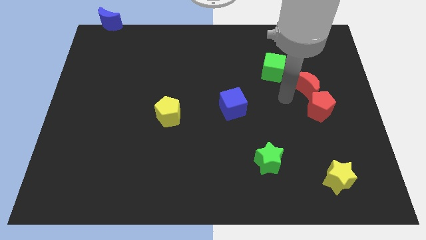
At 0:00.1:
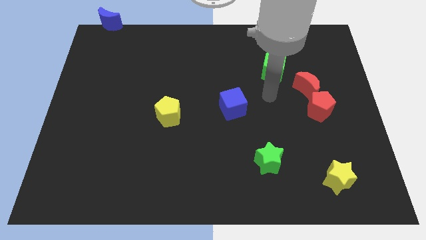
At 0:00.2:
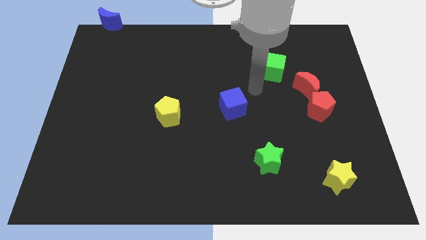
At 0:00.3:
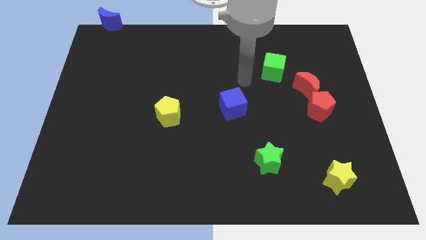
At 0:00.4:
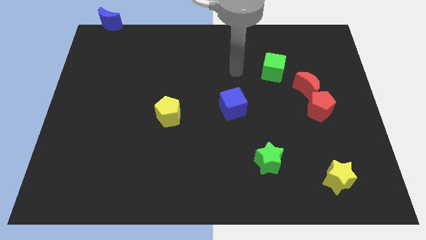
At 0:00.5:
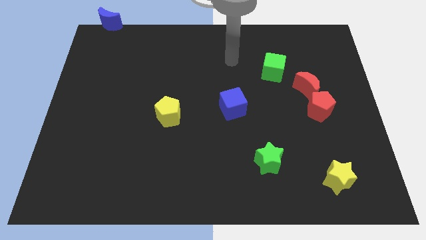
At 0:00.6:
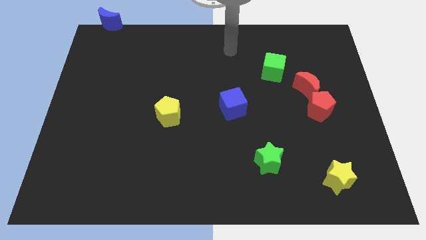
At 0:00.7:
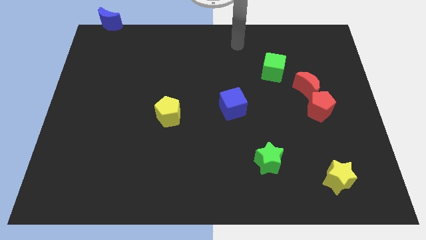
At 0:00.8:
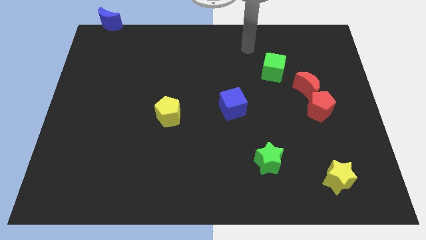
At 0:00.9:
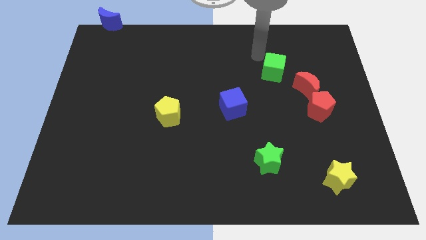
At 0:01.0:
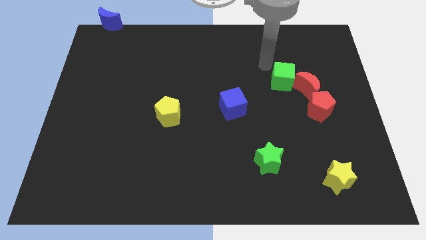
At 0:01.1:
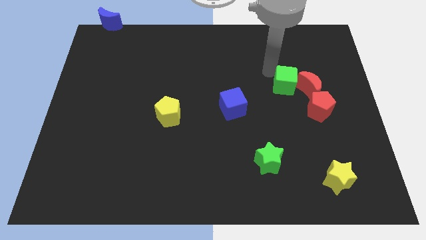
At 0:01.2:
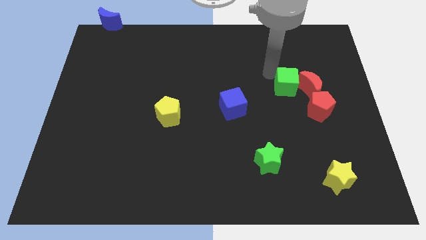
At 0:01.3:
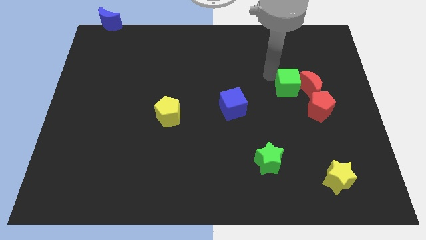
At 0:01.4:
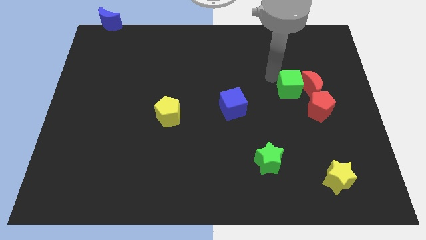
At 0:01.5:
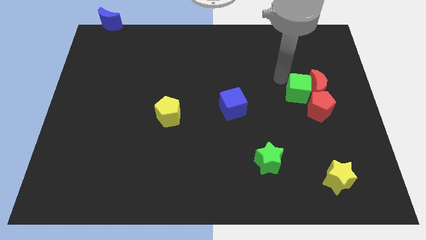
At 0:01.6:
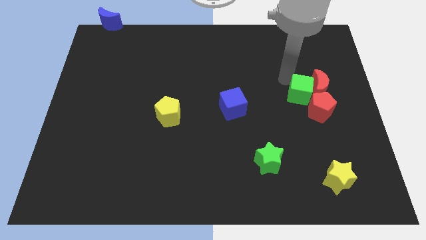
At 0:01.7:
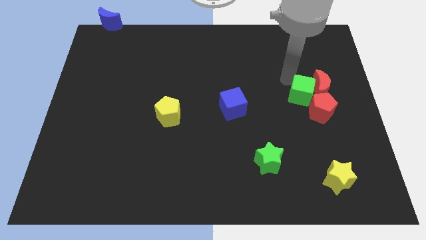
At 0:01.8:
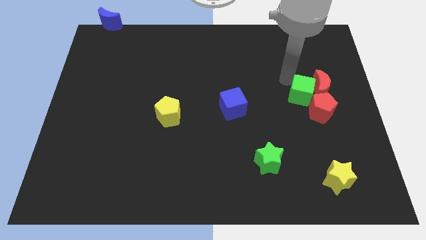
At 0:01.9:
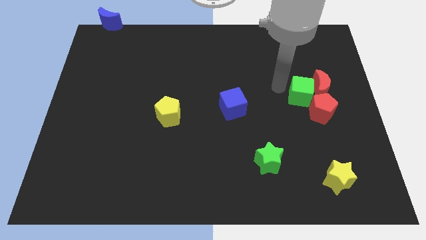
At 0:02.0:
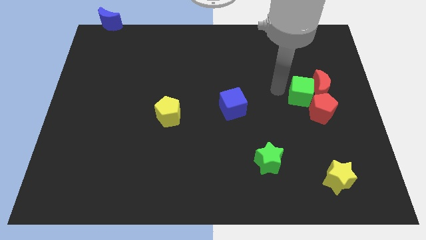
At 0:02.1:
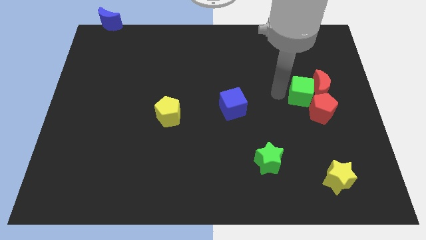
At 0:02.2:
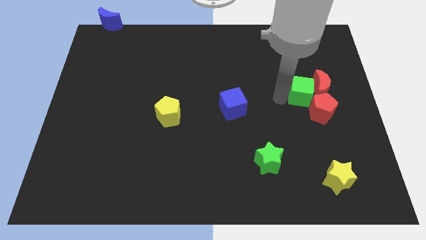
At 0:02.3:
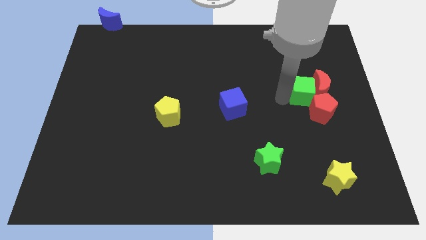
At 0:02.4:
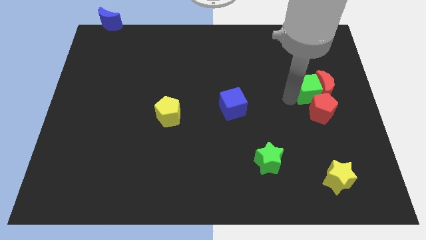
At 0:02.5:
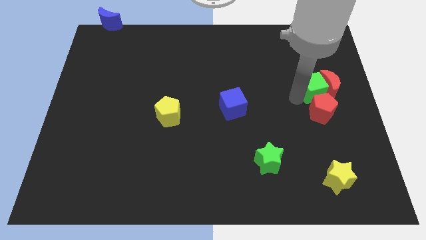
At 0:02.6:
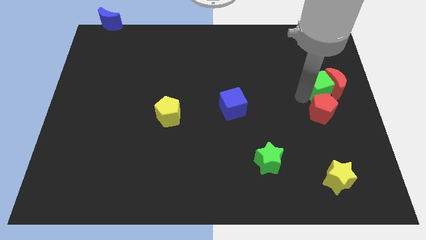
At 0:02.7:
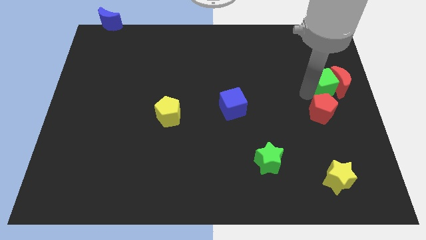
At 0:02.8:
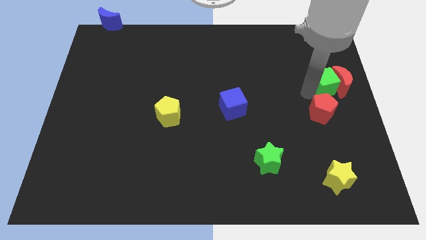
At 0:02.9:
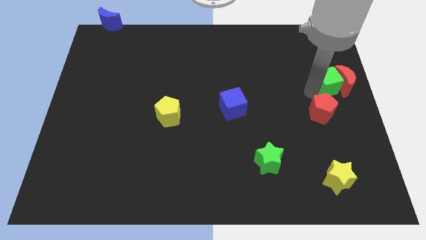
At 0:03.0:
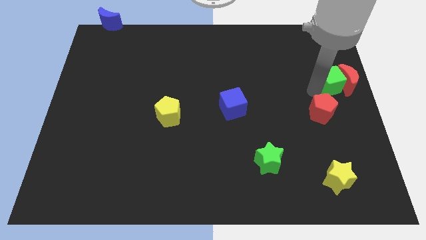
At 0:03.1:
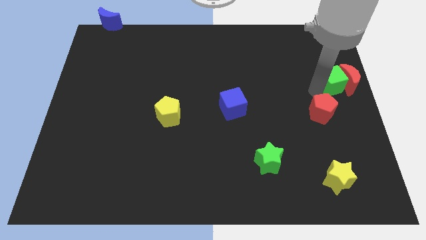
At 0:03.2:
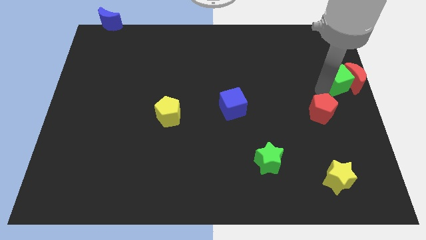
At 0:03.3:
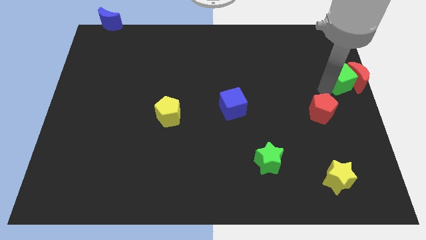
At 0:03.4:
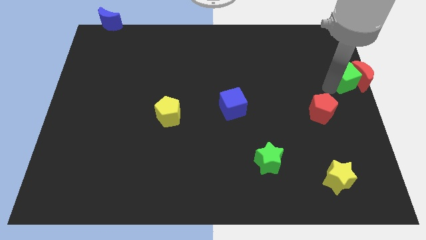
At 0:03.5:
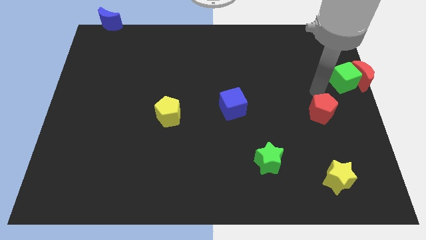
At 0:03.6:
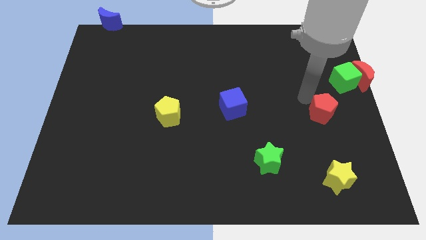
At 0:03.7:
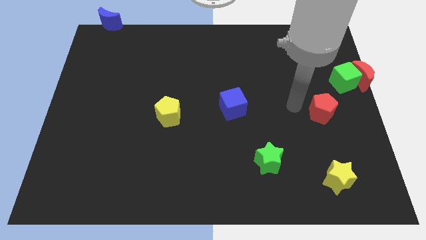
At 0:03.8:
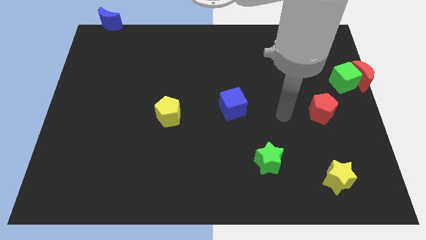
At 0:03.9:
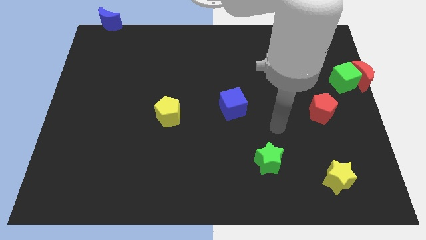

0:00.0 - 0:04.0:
drag green cube and red moon at the center right side of the board

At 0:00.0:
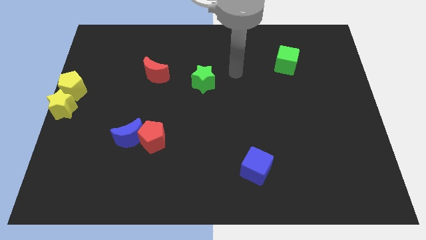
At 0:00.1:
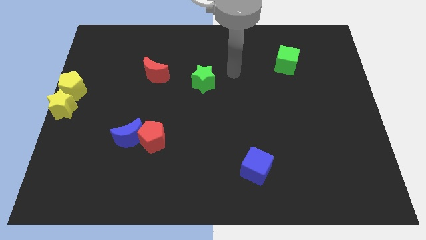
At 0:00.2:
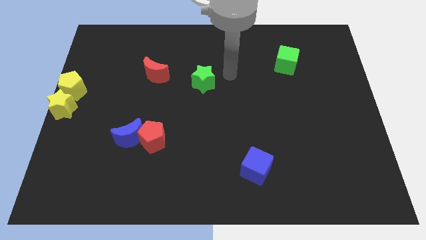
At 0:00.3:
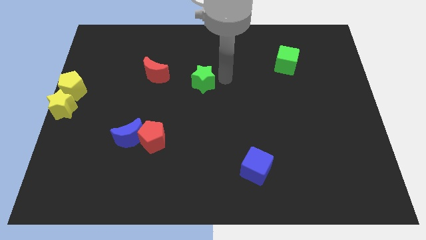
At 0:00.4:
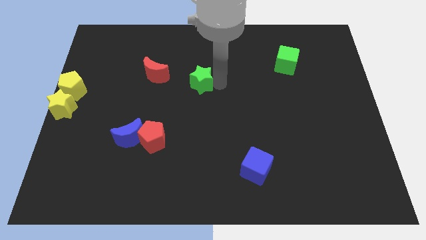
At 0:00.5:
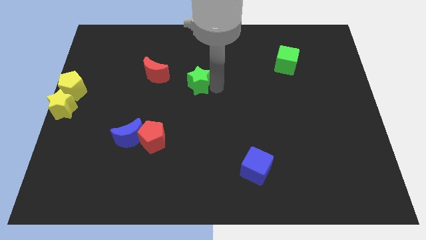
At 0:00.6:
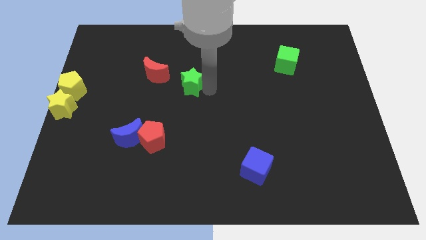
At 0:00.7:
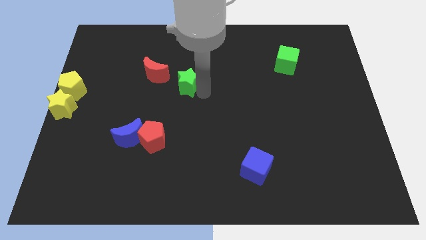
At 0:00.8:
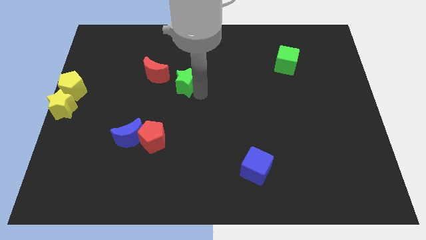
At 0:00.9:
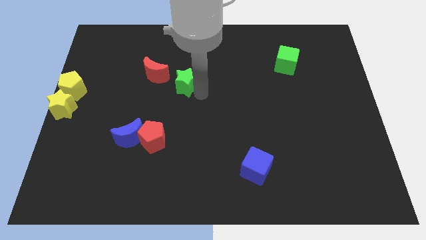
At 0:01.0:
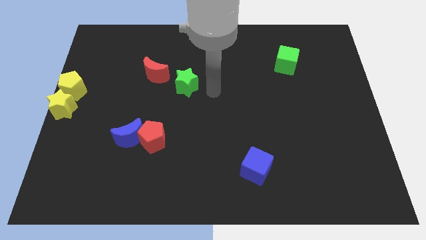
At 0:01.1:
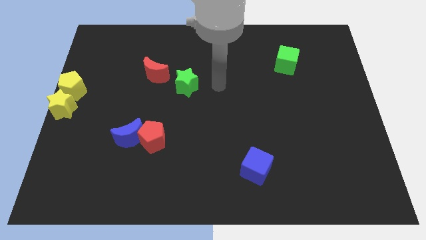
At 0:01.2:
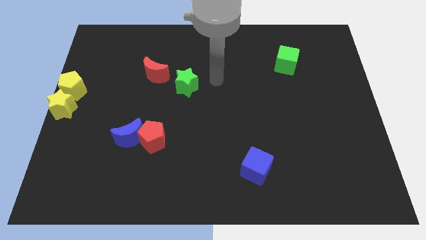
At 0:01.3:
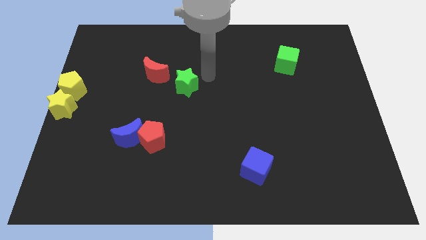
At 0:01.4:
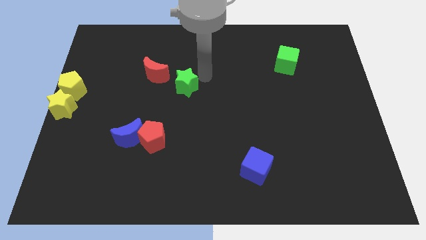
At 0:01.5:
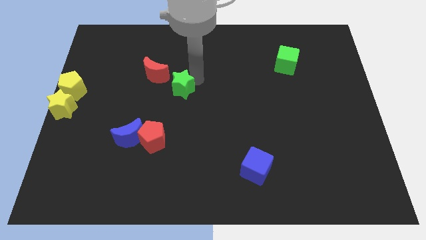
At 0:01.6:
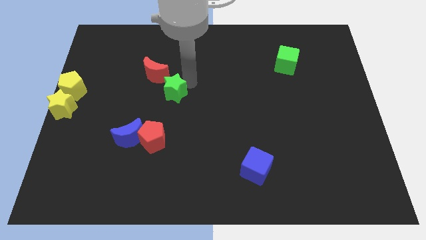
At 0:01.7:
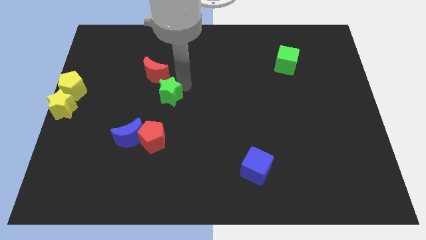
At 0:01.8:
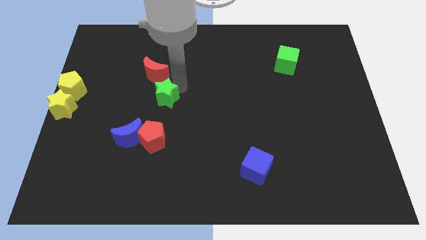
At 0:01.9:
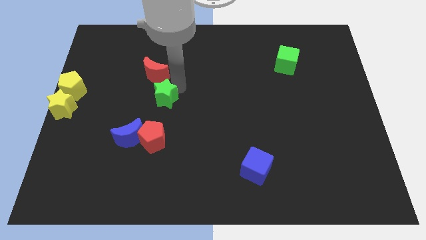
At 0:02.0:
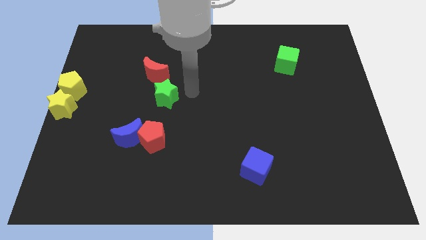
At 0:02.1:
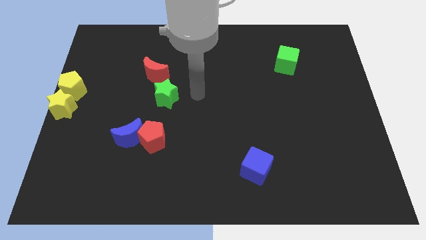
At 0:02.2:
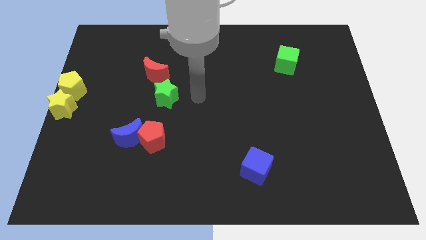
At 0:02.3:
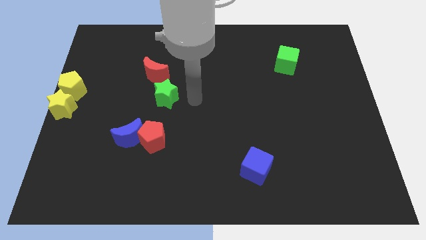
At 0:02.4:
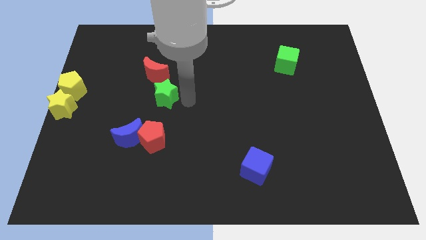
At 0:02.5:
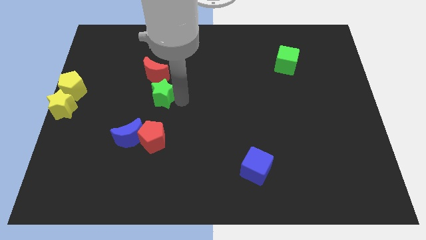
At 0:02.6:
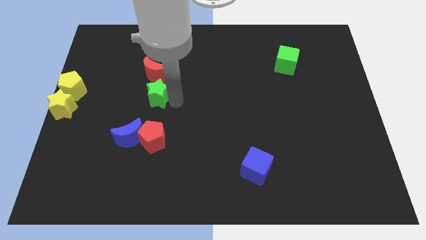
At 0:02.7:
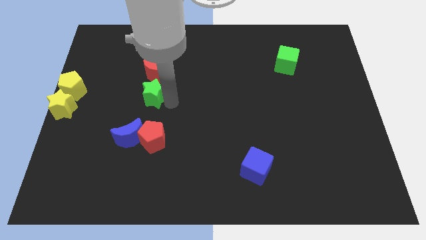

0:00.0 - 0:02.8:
push the green star to the bottom of the red crescent

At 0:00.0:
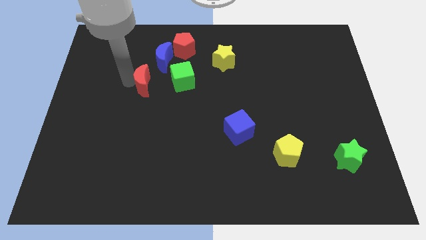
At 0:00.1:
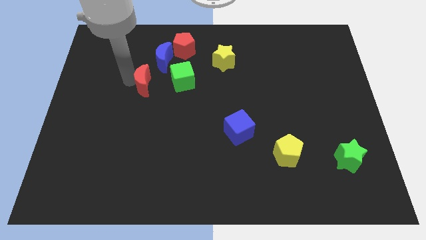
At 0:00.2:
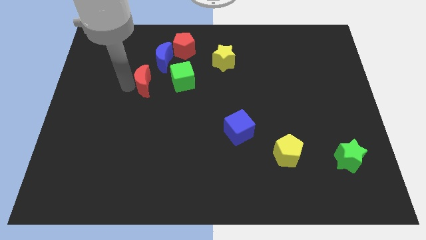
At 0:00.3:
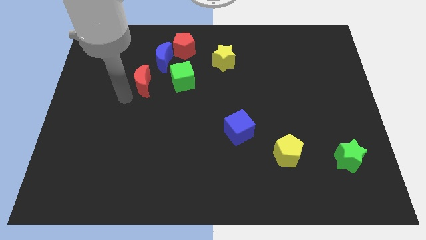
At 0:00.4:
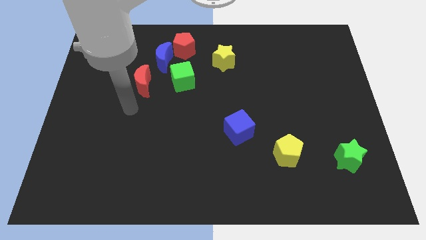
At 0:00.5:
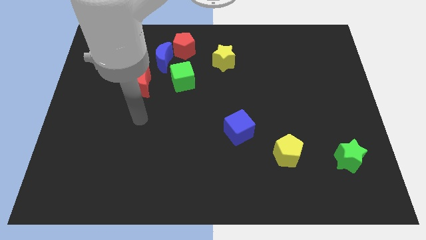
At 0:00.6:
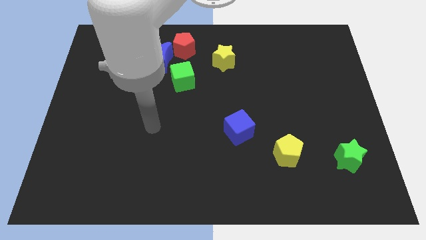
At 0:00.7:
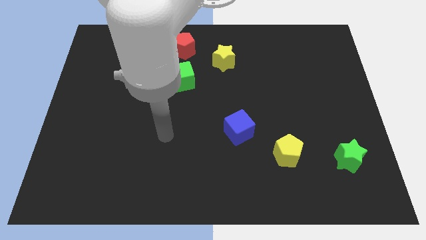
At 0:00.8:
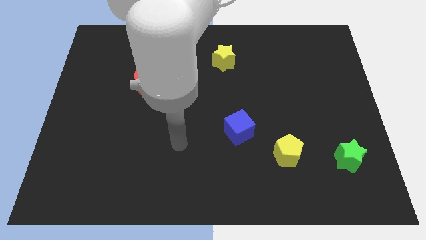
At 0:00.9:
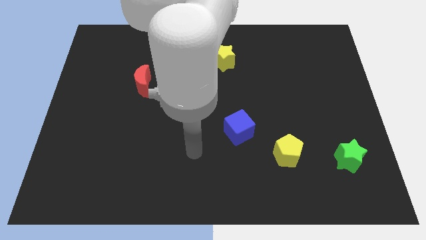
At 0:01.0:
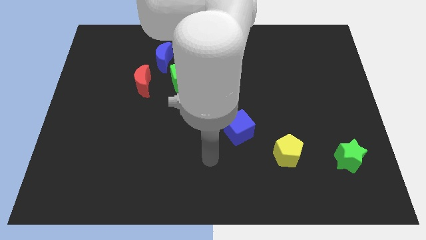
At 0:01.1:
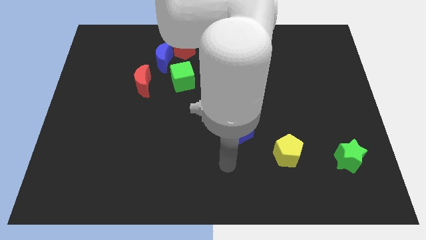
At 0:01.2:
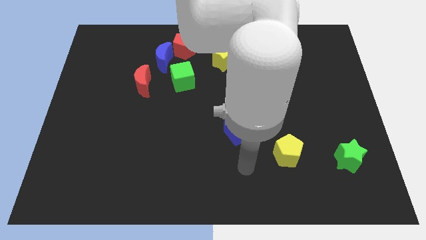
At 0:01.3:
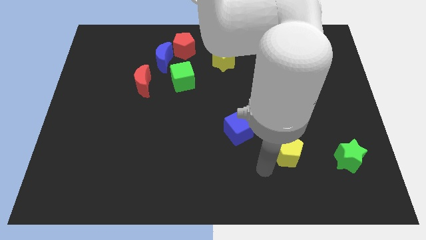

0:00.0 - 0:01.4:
move your arm away from the red crescent

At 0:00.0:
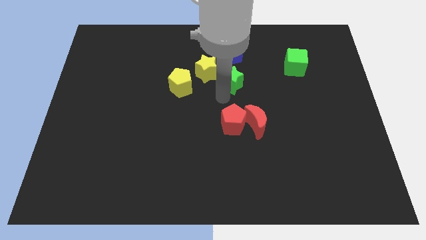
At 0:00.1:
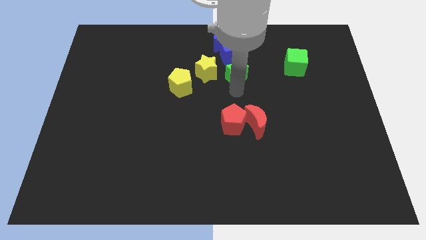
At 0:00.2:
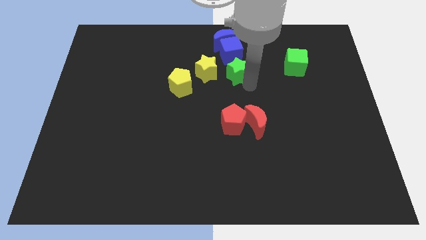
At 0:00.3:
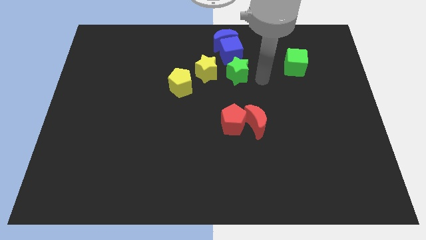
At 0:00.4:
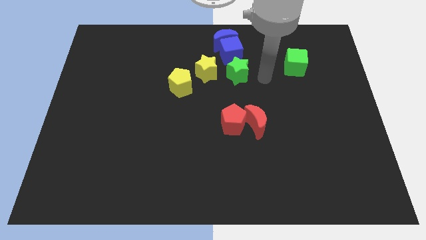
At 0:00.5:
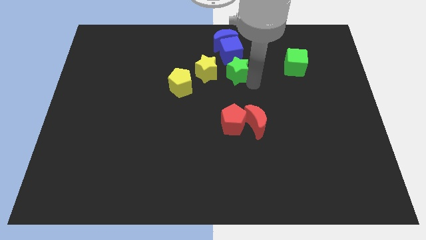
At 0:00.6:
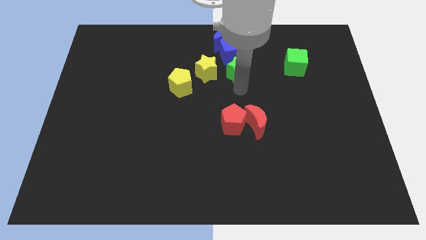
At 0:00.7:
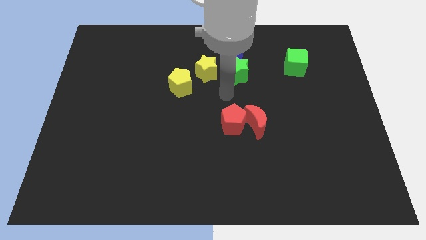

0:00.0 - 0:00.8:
push the green star into the blue block

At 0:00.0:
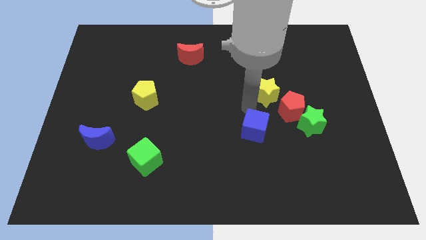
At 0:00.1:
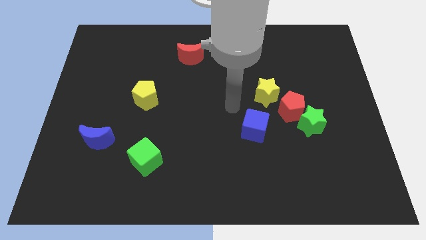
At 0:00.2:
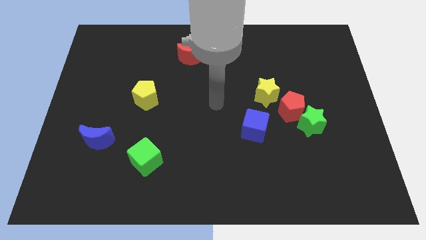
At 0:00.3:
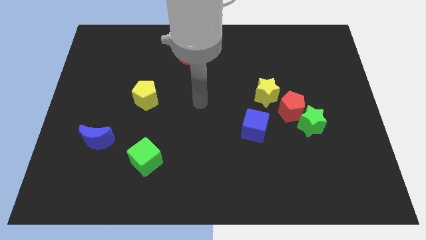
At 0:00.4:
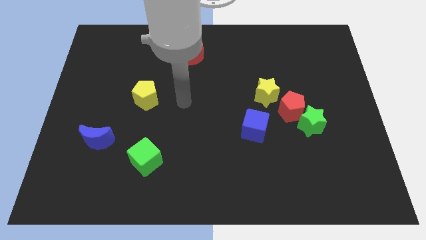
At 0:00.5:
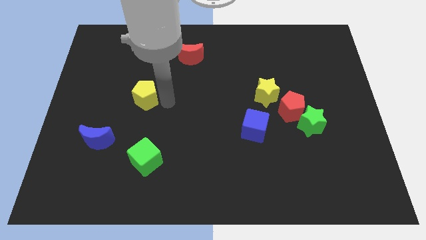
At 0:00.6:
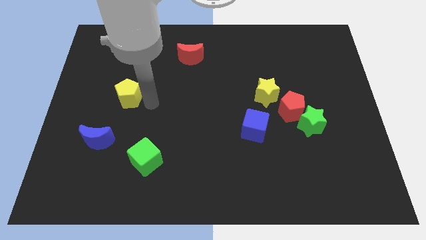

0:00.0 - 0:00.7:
move the arm away from the blue cube
